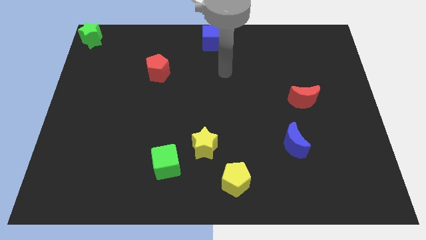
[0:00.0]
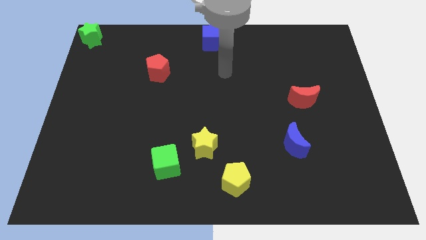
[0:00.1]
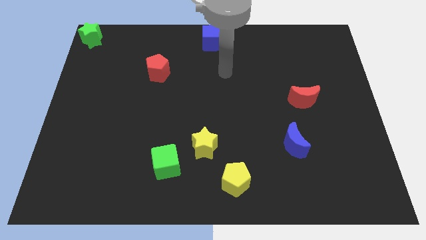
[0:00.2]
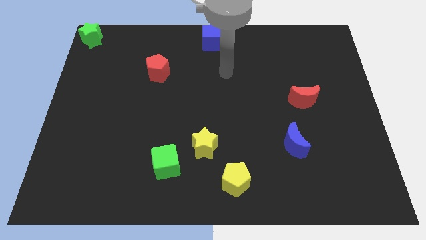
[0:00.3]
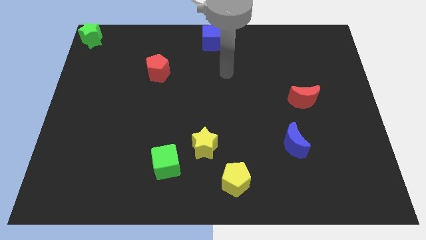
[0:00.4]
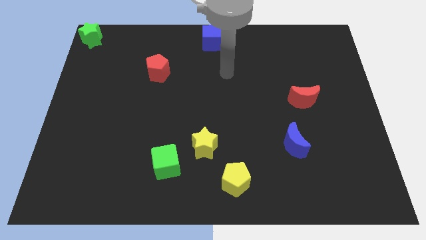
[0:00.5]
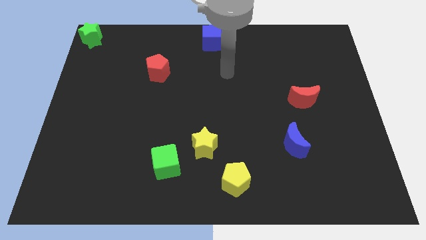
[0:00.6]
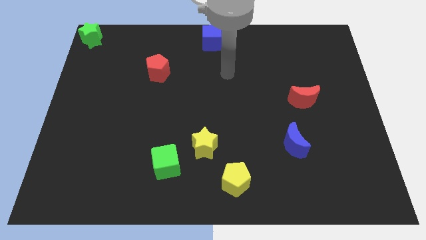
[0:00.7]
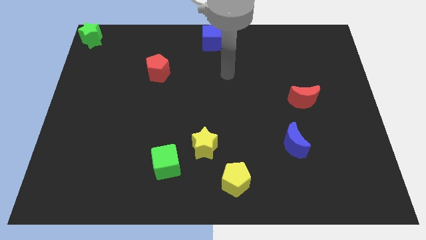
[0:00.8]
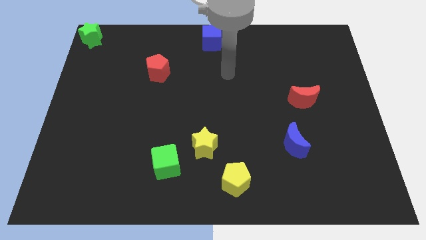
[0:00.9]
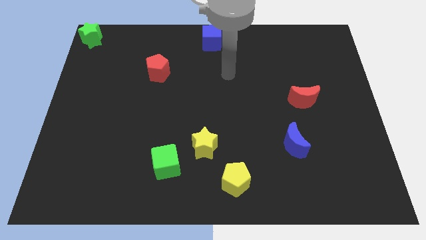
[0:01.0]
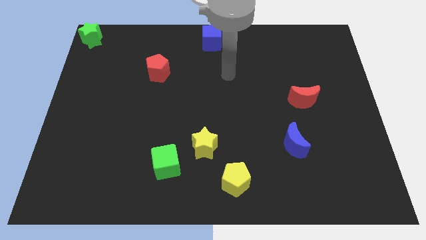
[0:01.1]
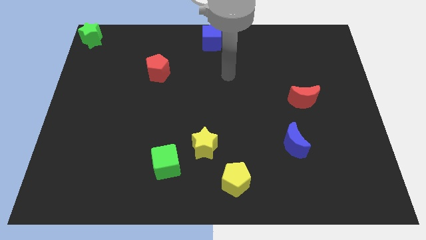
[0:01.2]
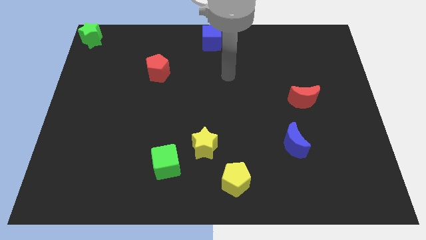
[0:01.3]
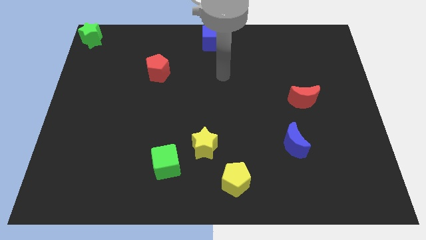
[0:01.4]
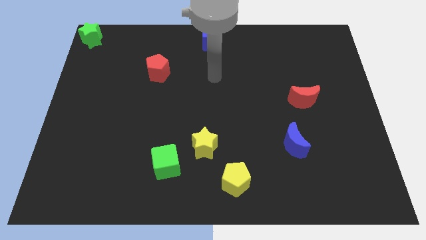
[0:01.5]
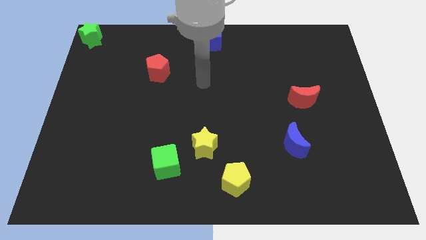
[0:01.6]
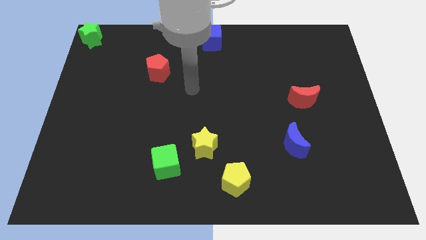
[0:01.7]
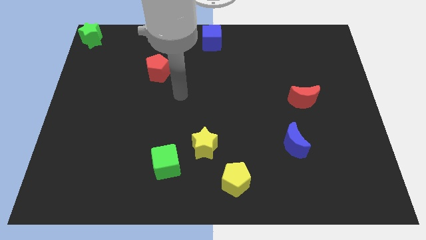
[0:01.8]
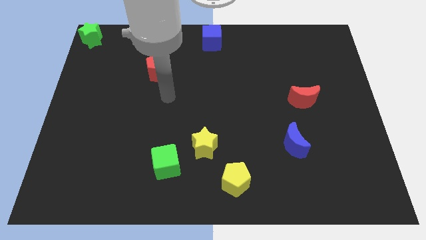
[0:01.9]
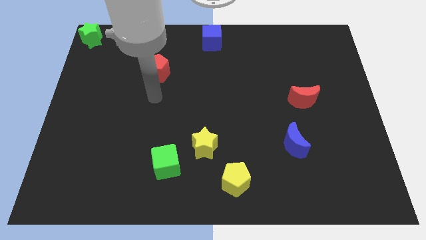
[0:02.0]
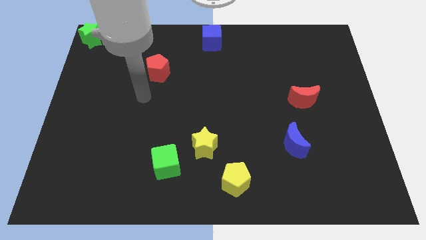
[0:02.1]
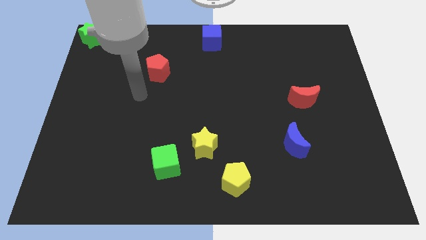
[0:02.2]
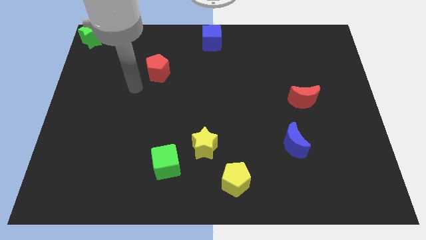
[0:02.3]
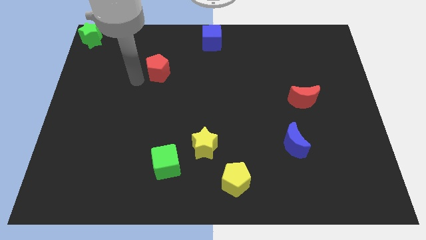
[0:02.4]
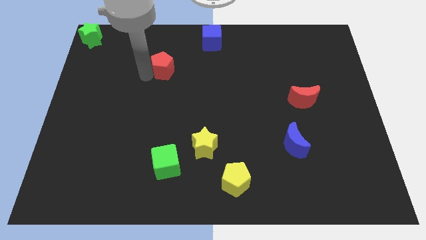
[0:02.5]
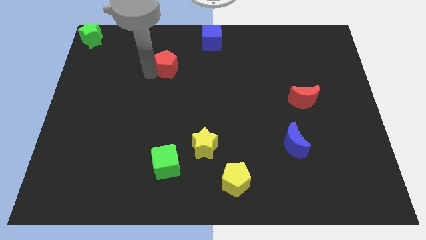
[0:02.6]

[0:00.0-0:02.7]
place the arm near the red pentagon

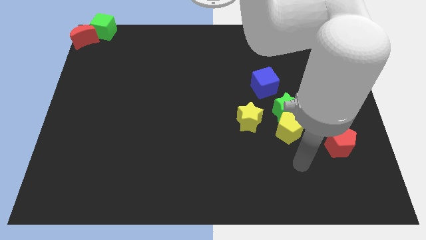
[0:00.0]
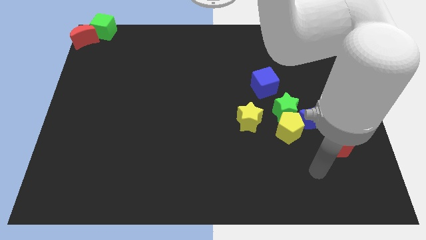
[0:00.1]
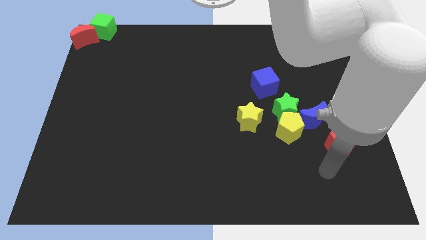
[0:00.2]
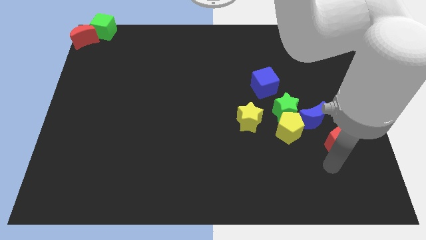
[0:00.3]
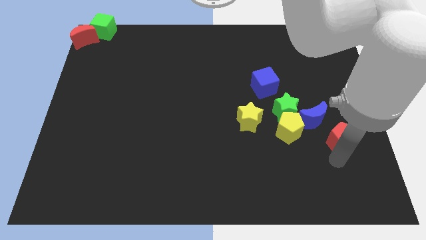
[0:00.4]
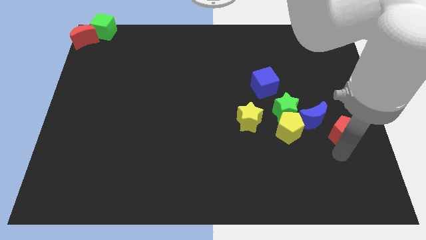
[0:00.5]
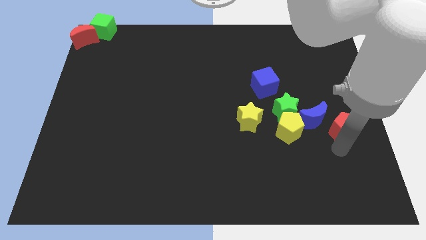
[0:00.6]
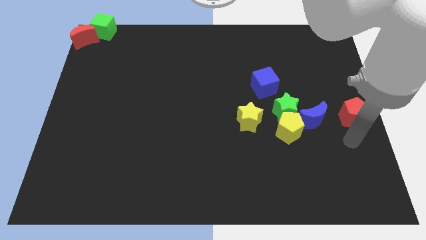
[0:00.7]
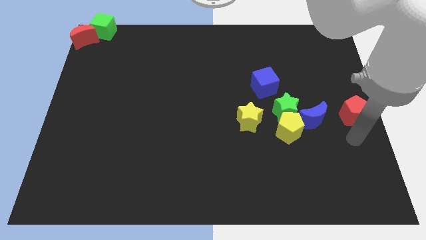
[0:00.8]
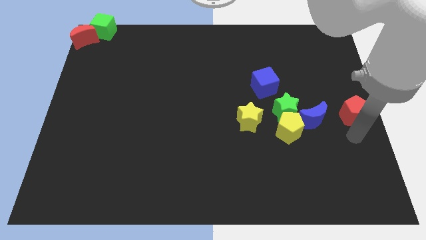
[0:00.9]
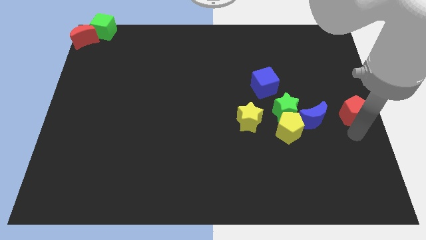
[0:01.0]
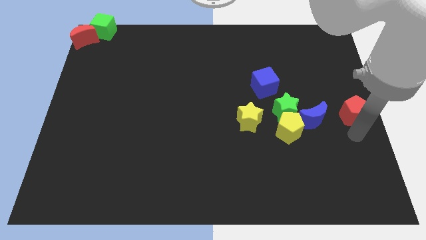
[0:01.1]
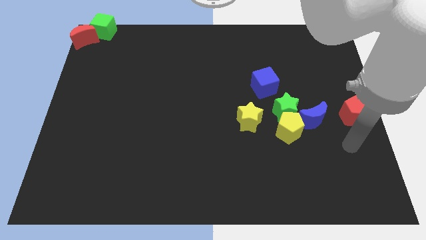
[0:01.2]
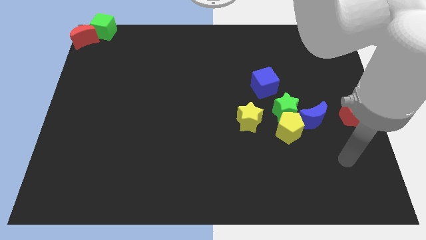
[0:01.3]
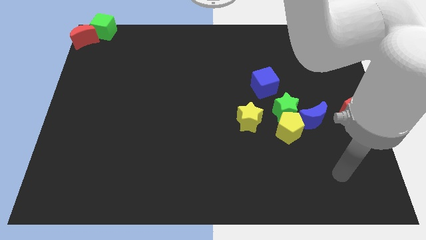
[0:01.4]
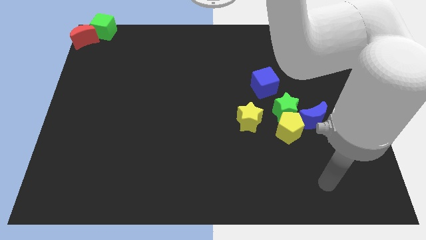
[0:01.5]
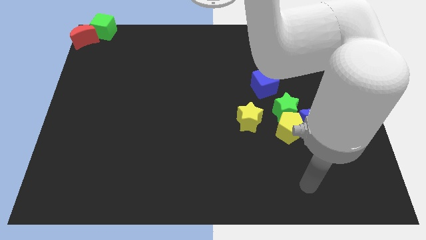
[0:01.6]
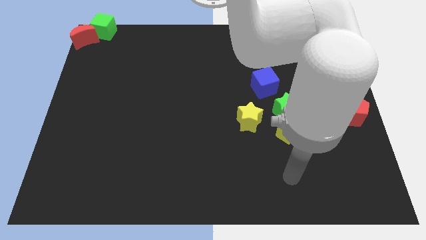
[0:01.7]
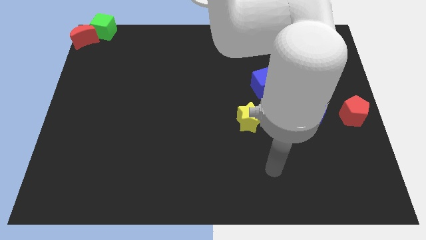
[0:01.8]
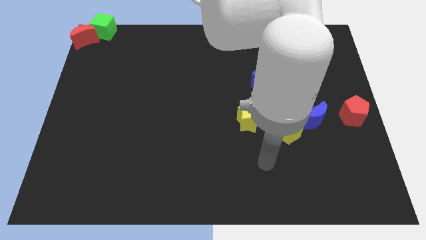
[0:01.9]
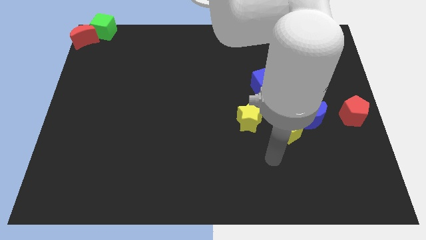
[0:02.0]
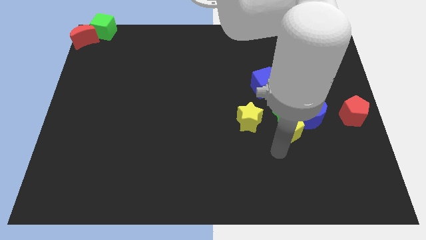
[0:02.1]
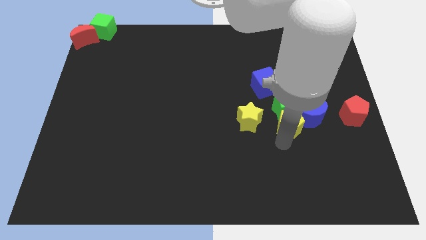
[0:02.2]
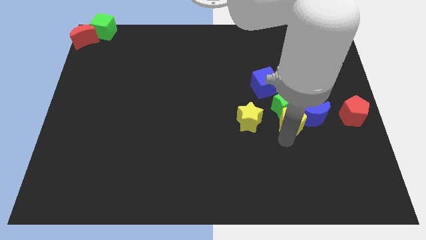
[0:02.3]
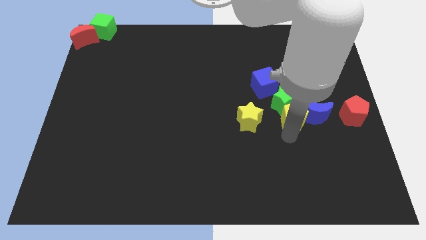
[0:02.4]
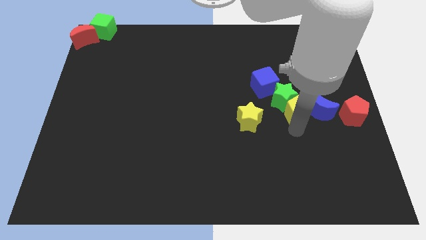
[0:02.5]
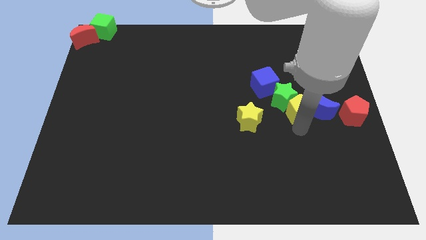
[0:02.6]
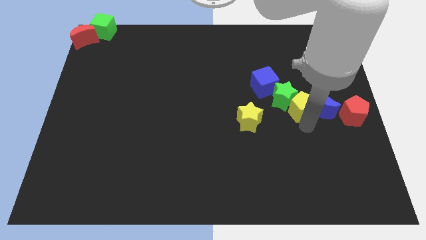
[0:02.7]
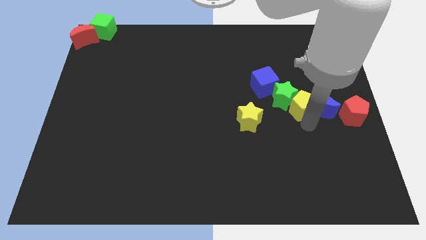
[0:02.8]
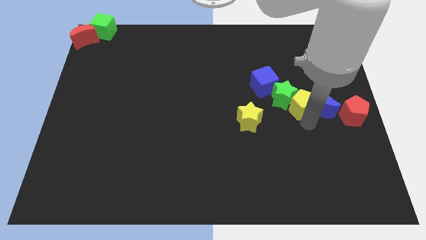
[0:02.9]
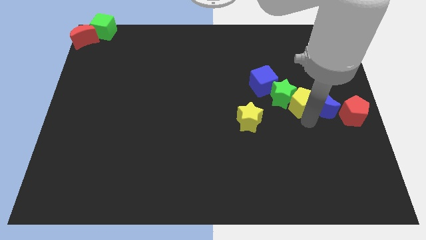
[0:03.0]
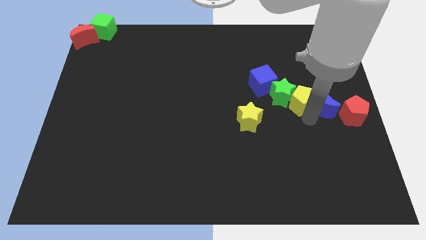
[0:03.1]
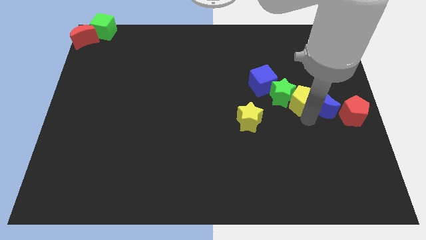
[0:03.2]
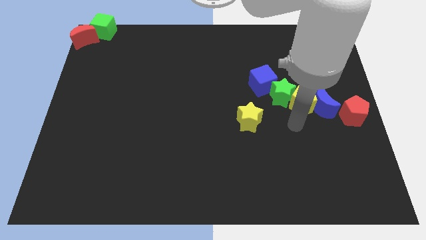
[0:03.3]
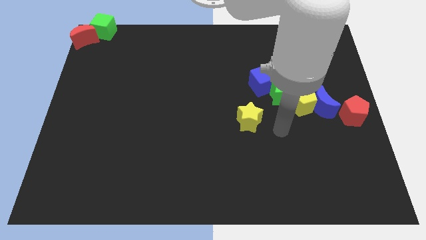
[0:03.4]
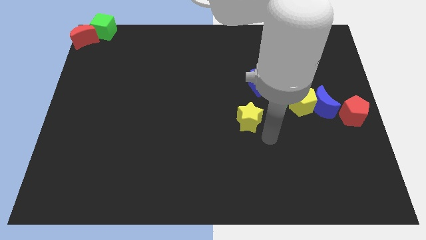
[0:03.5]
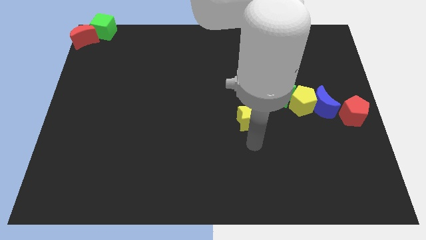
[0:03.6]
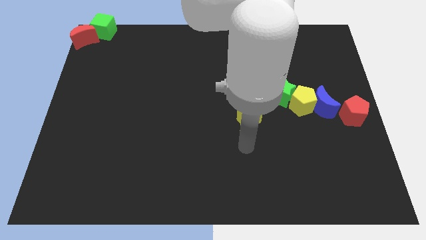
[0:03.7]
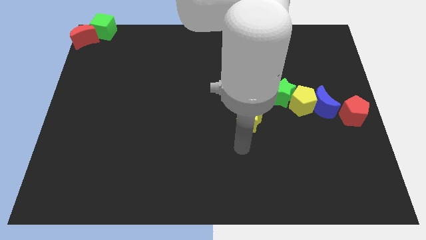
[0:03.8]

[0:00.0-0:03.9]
adjust the pentagon with the group of blocks

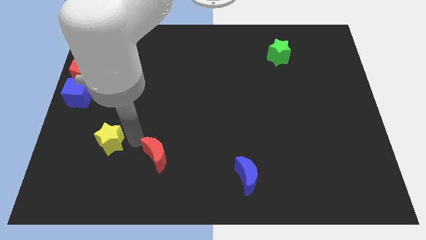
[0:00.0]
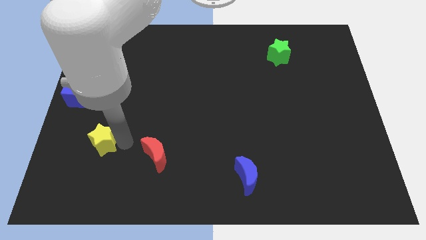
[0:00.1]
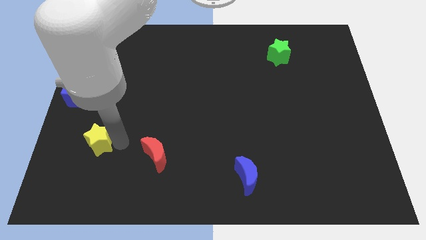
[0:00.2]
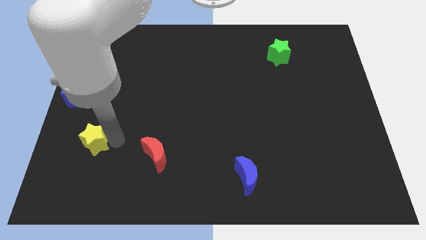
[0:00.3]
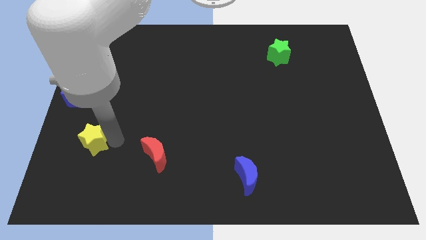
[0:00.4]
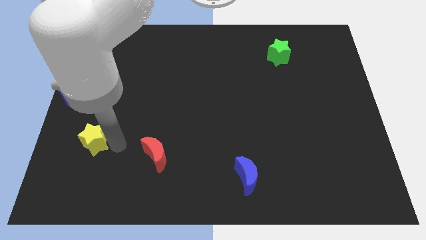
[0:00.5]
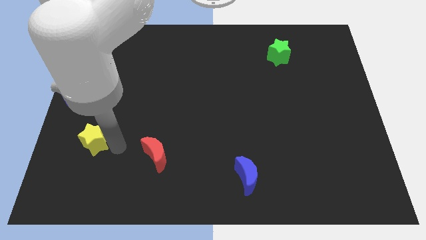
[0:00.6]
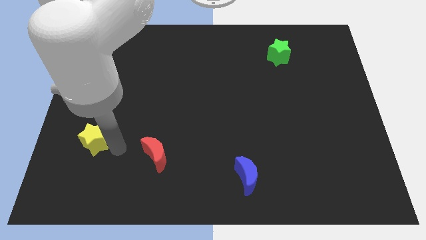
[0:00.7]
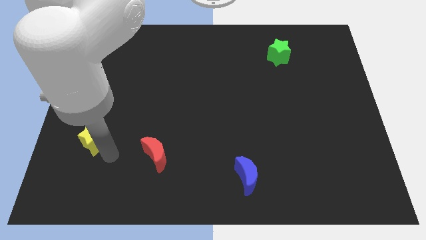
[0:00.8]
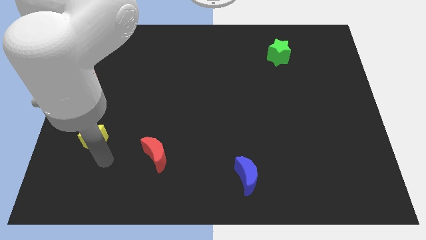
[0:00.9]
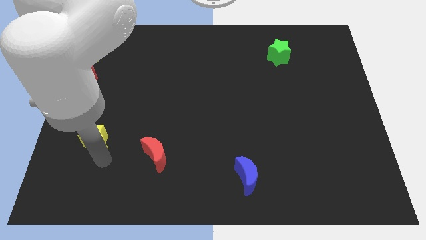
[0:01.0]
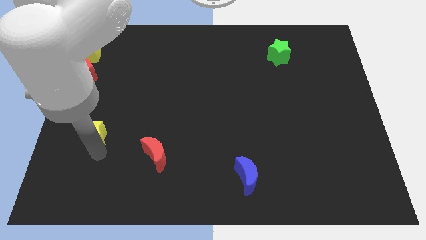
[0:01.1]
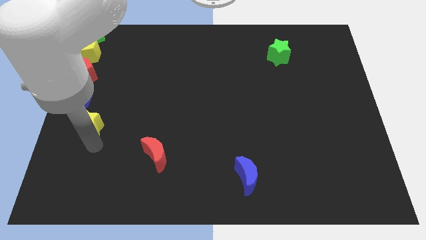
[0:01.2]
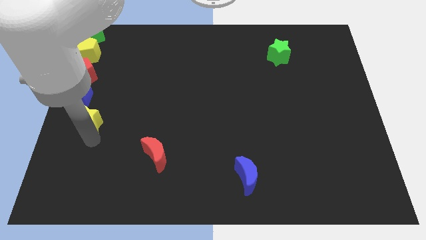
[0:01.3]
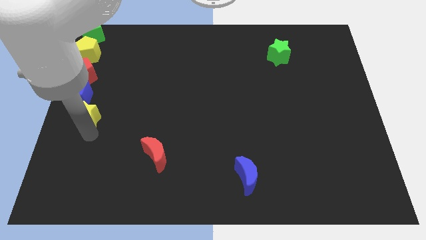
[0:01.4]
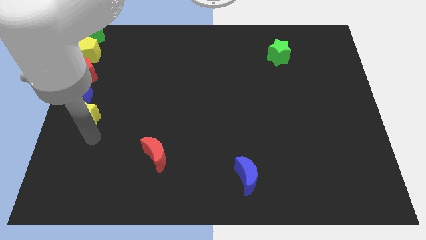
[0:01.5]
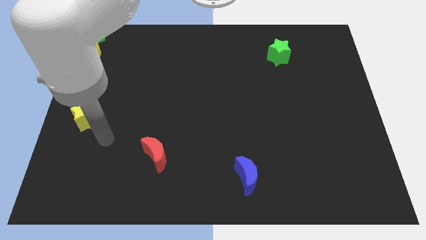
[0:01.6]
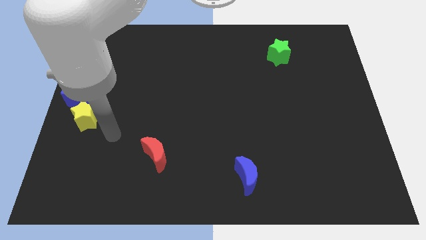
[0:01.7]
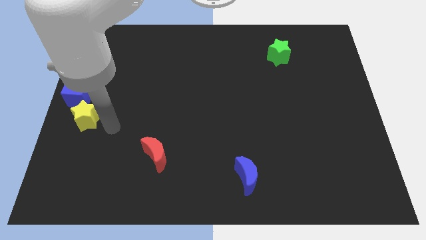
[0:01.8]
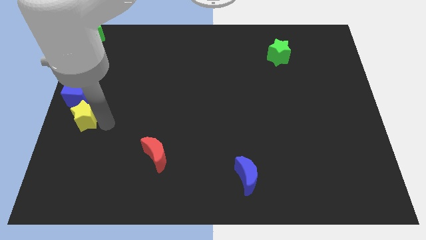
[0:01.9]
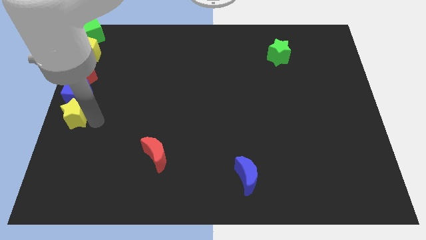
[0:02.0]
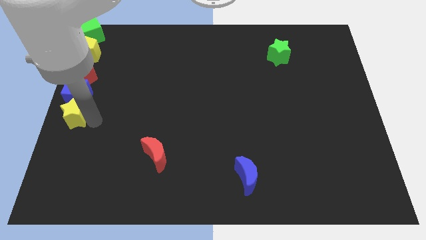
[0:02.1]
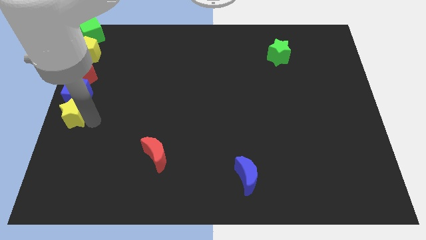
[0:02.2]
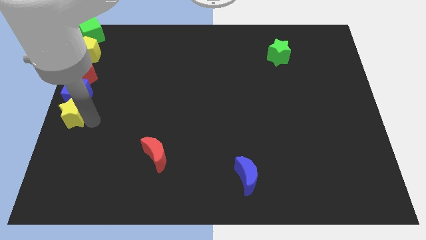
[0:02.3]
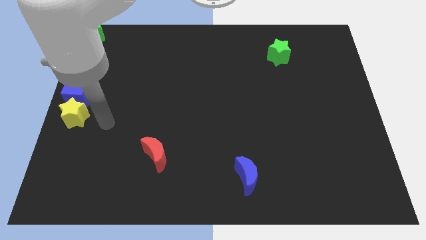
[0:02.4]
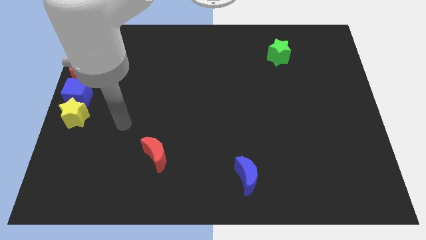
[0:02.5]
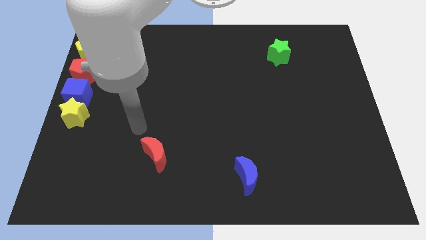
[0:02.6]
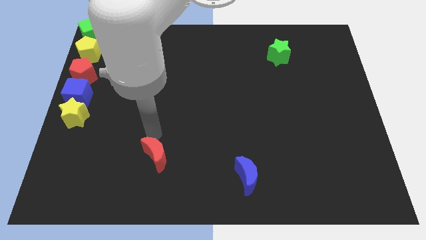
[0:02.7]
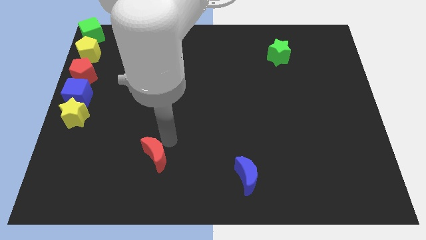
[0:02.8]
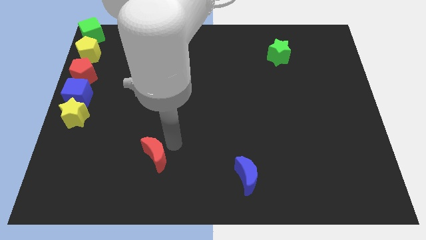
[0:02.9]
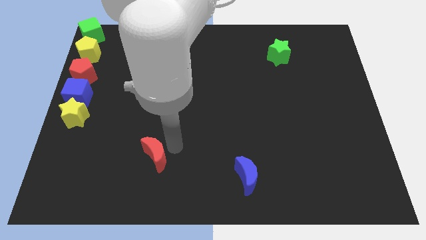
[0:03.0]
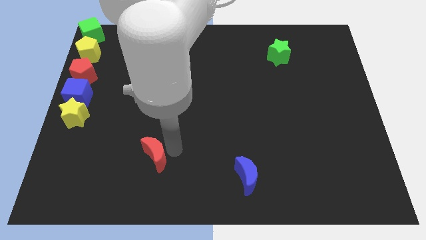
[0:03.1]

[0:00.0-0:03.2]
move the yellow star away from red moon
